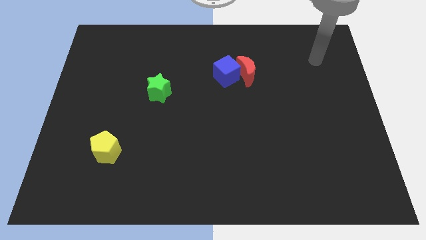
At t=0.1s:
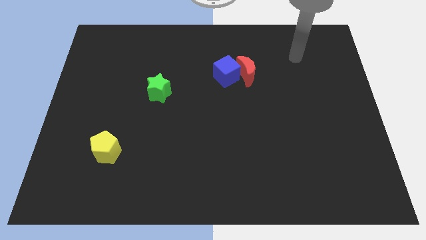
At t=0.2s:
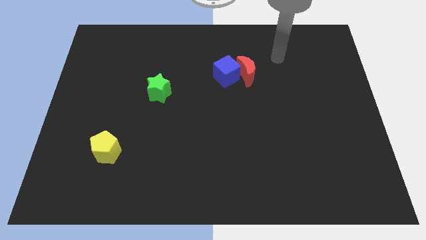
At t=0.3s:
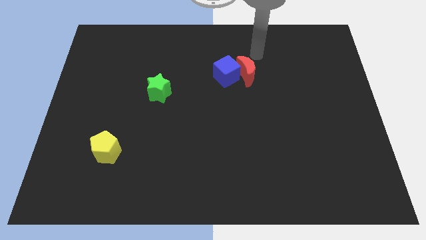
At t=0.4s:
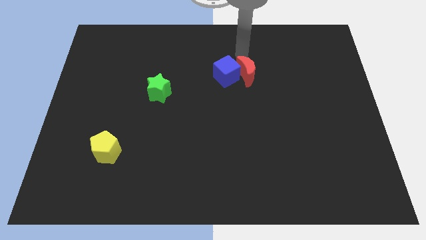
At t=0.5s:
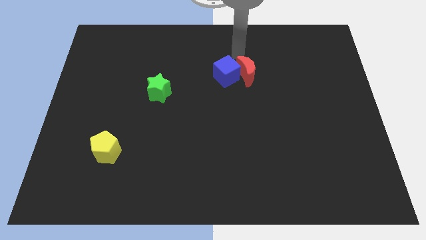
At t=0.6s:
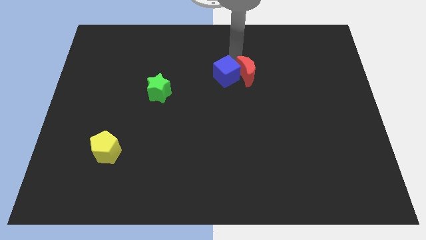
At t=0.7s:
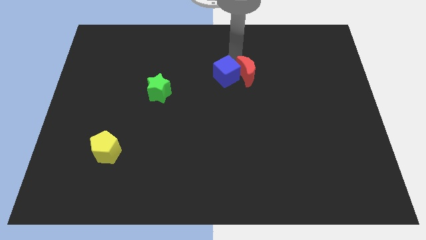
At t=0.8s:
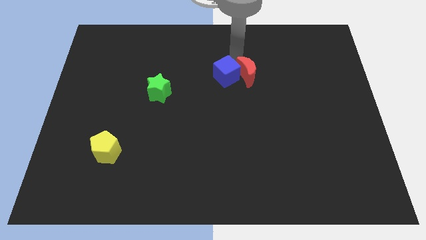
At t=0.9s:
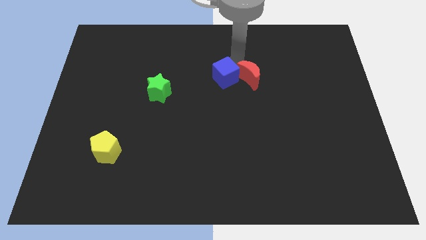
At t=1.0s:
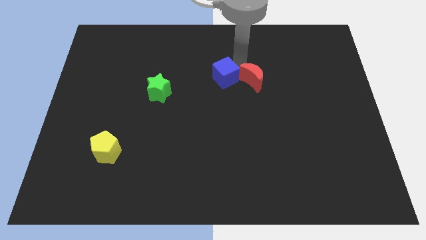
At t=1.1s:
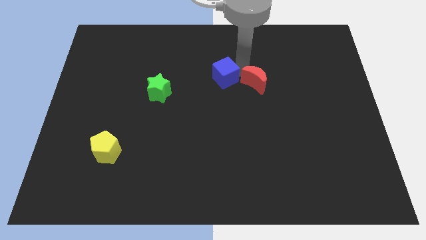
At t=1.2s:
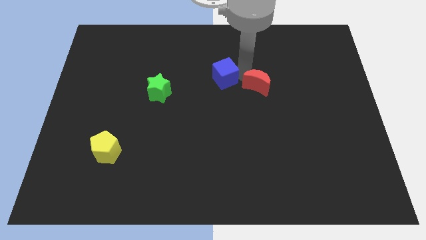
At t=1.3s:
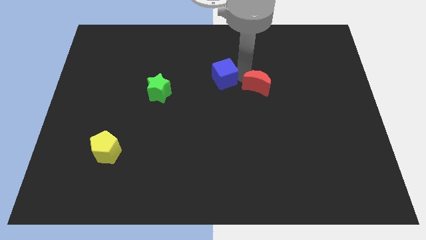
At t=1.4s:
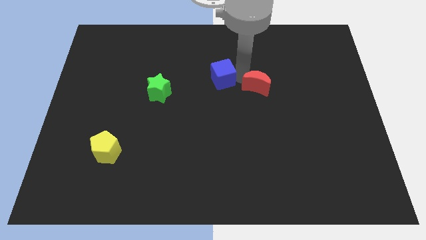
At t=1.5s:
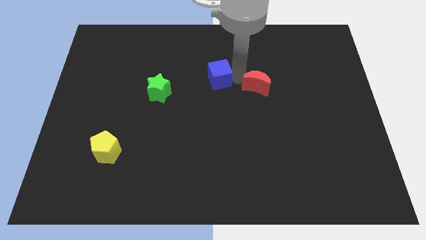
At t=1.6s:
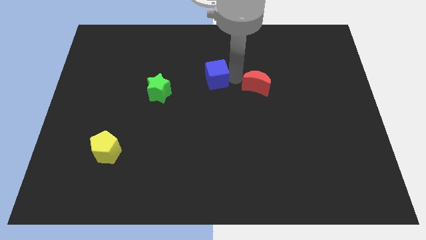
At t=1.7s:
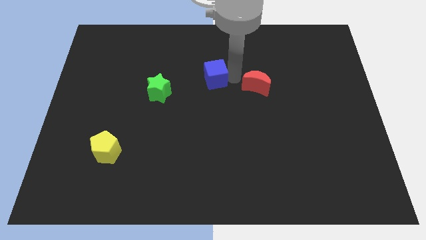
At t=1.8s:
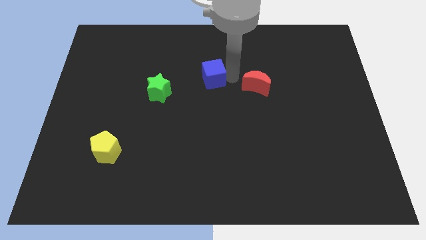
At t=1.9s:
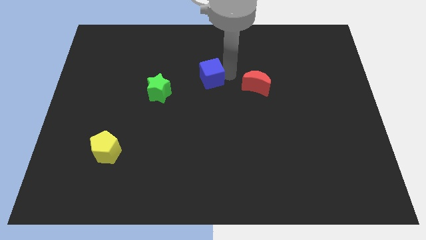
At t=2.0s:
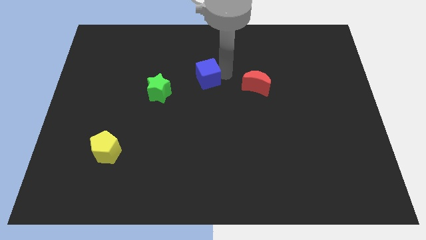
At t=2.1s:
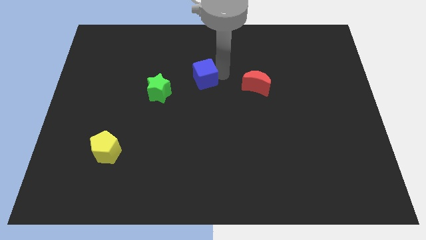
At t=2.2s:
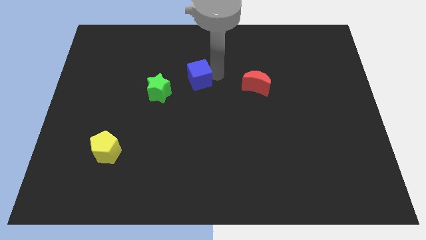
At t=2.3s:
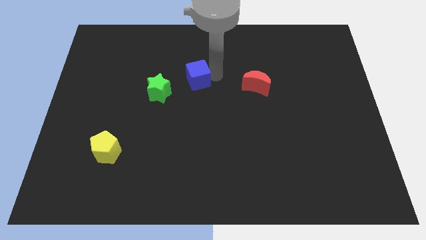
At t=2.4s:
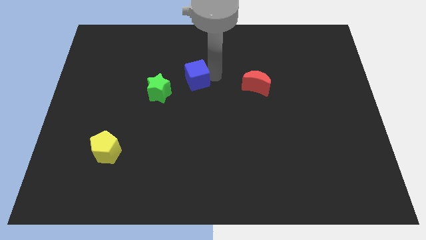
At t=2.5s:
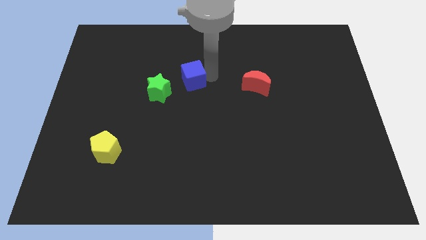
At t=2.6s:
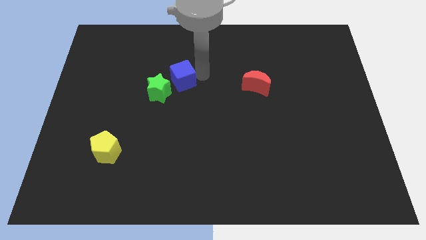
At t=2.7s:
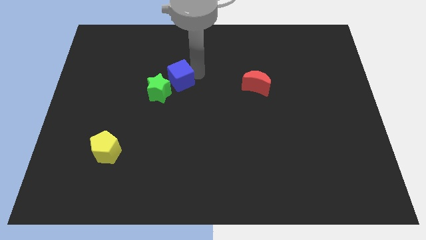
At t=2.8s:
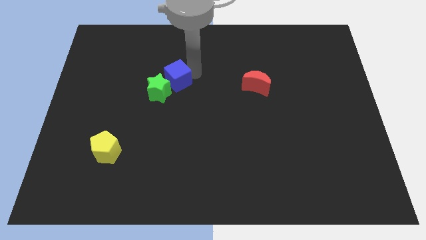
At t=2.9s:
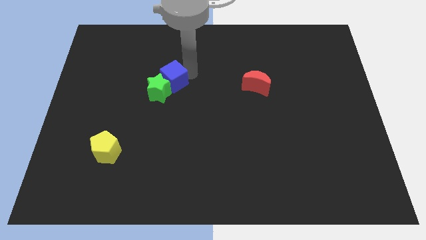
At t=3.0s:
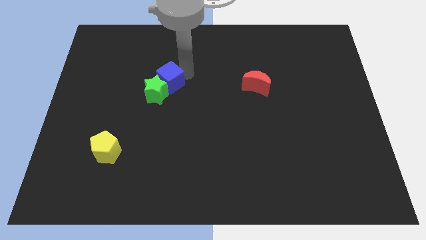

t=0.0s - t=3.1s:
move the blue cube next to the green block

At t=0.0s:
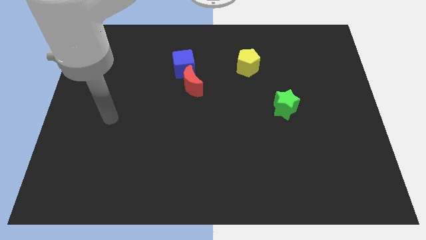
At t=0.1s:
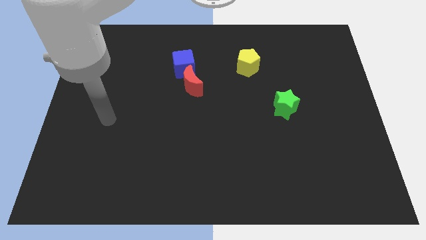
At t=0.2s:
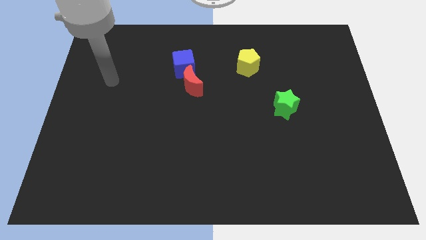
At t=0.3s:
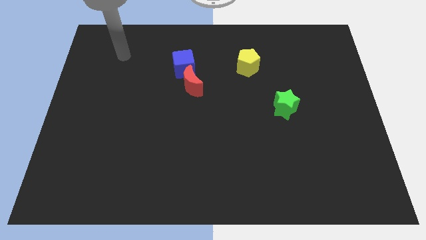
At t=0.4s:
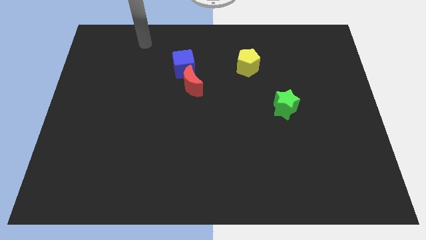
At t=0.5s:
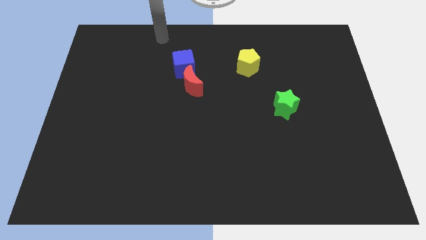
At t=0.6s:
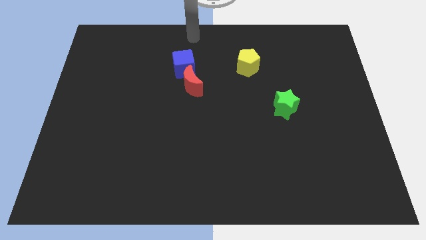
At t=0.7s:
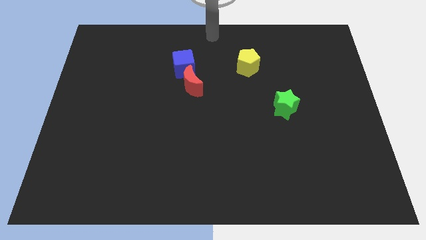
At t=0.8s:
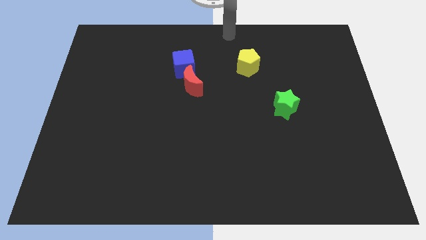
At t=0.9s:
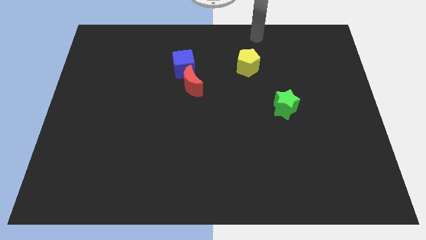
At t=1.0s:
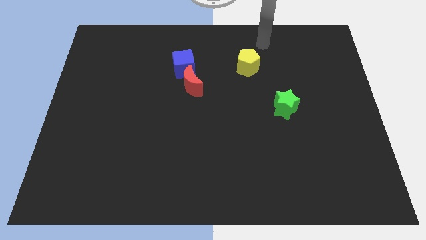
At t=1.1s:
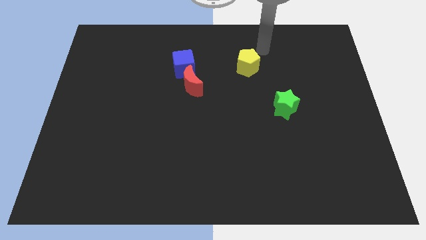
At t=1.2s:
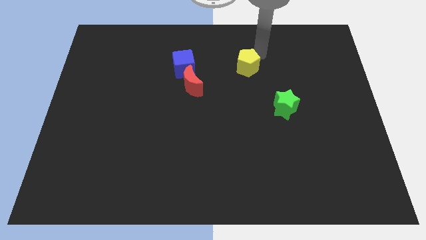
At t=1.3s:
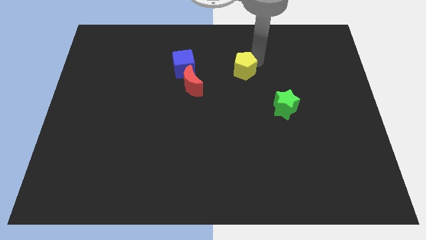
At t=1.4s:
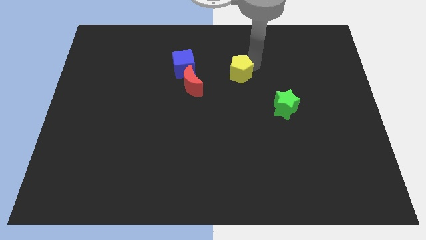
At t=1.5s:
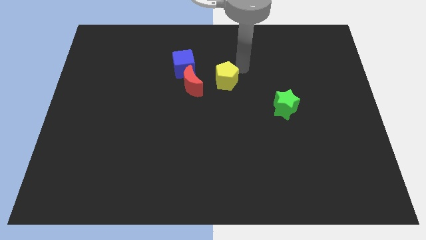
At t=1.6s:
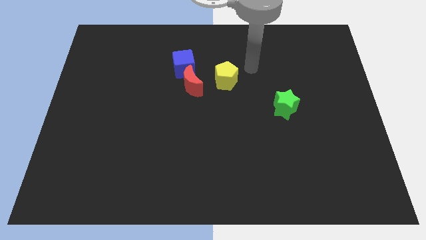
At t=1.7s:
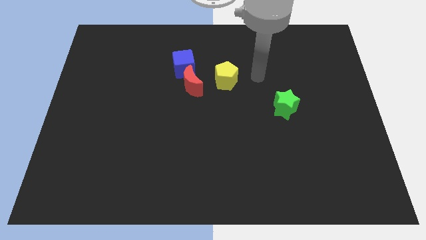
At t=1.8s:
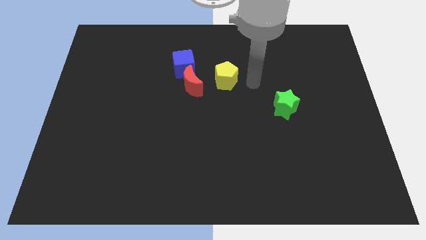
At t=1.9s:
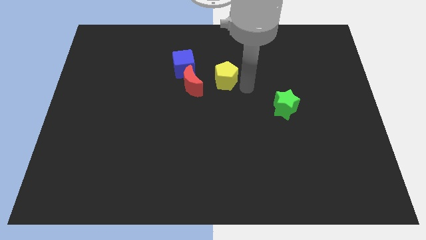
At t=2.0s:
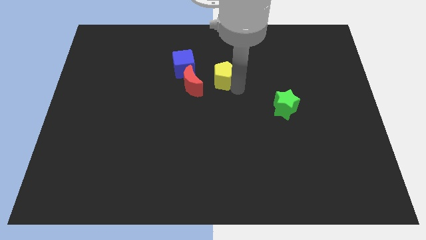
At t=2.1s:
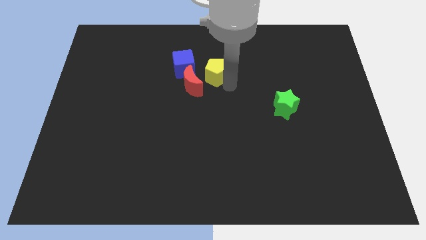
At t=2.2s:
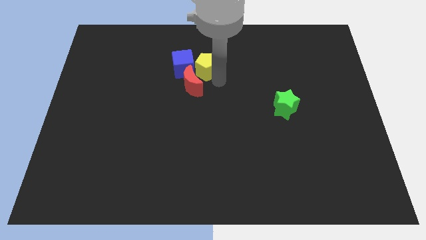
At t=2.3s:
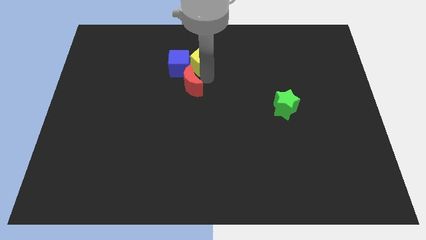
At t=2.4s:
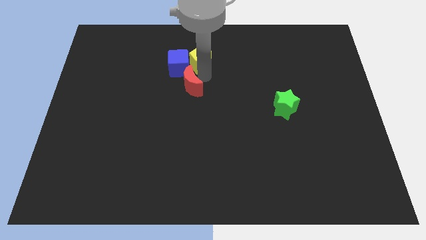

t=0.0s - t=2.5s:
slide the pentagon to the blue cube

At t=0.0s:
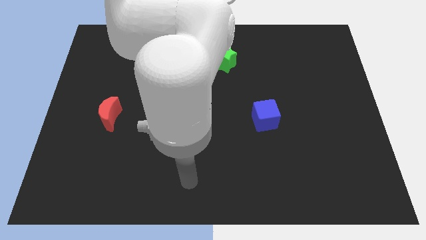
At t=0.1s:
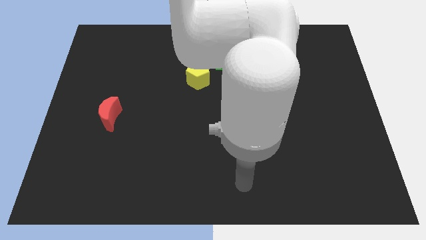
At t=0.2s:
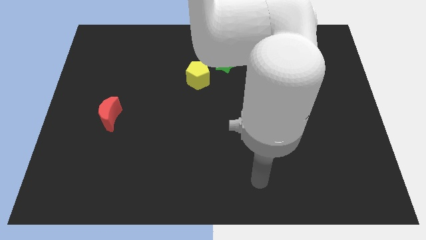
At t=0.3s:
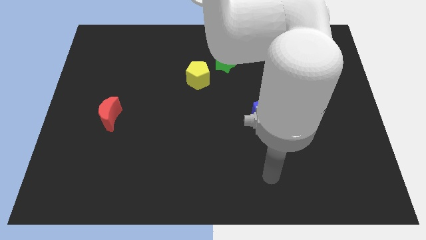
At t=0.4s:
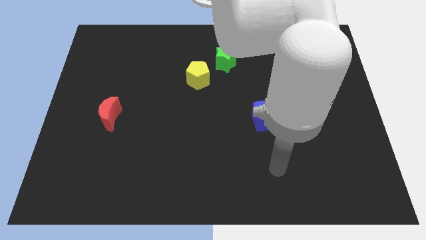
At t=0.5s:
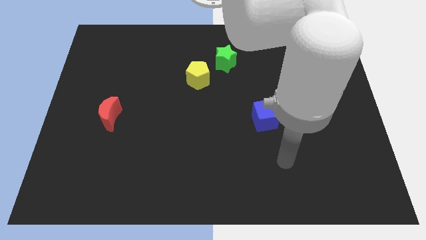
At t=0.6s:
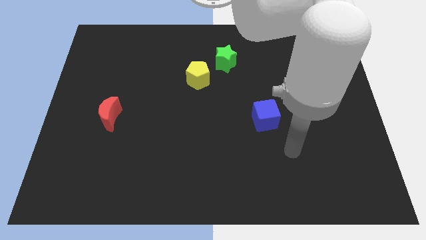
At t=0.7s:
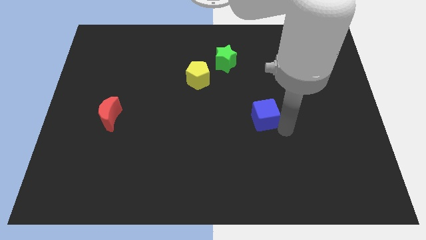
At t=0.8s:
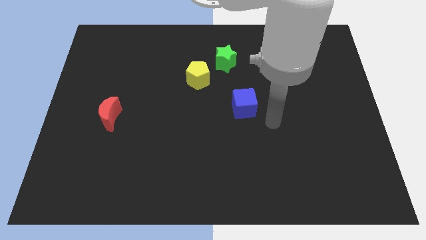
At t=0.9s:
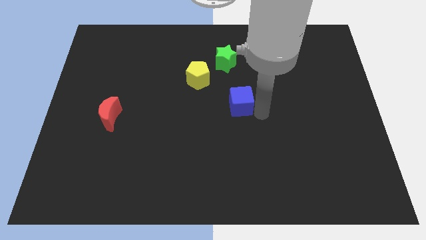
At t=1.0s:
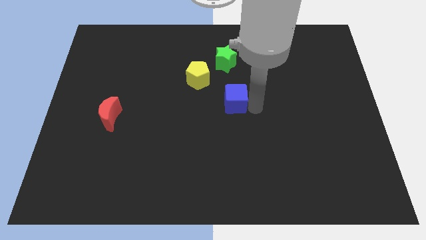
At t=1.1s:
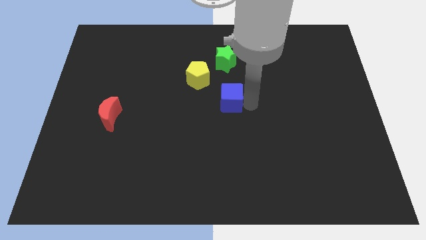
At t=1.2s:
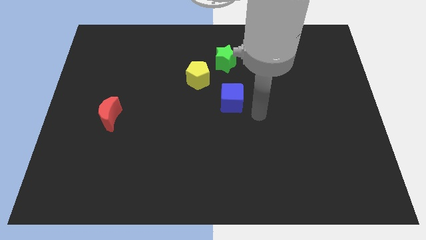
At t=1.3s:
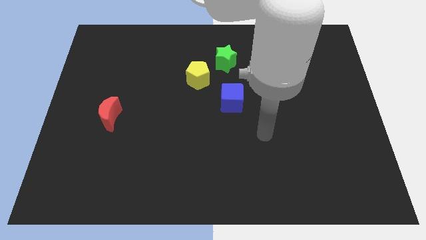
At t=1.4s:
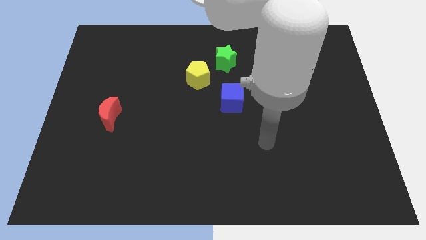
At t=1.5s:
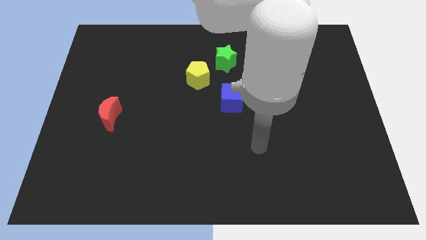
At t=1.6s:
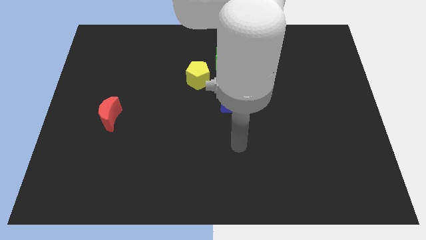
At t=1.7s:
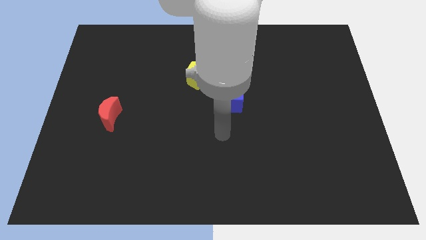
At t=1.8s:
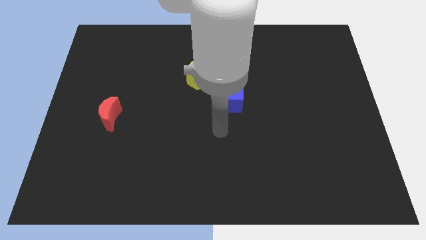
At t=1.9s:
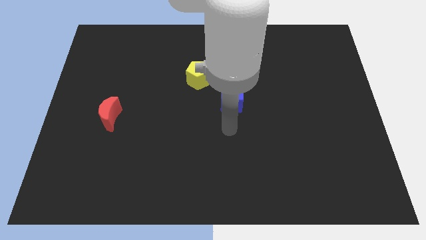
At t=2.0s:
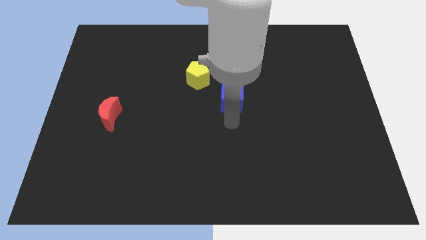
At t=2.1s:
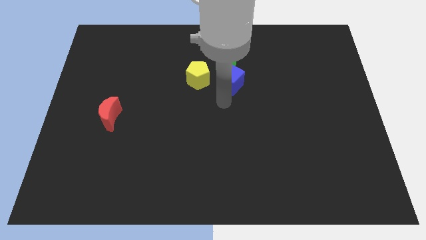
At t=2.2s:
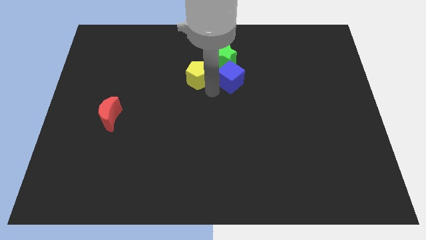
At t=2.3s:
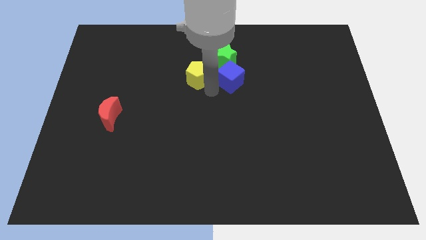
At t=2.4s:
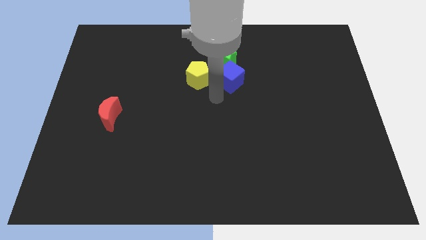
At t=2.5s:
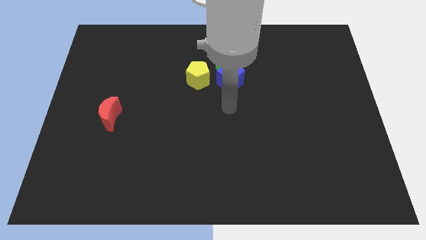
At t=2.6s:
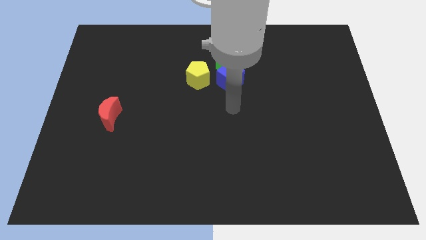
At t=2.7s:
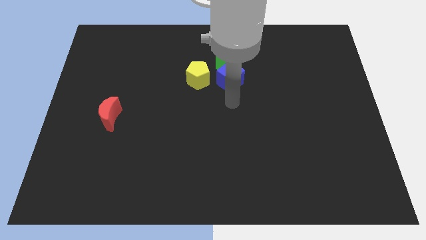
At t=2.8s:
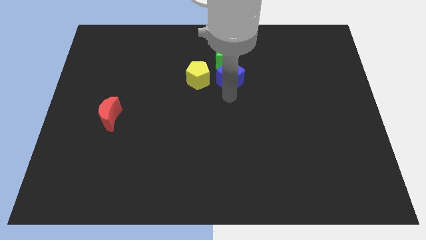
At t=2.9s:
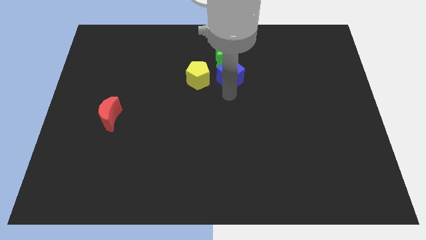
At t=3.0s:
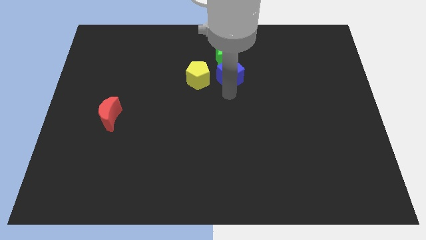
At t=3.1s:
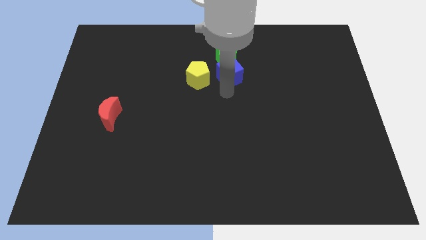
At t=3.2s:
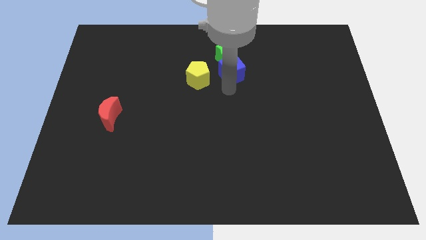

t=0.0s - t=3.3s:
slide the blue cube to the star
